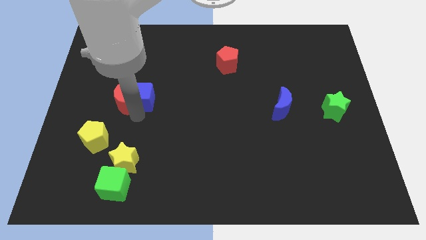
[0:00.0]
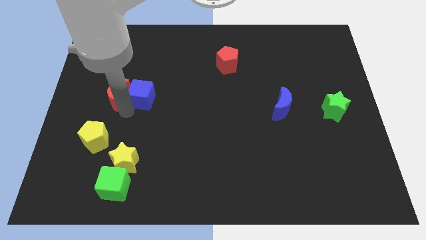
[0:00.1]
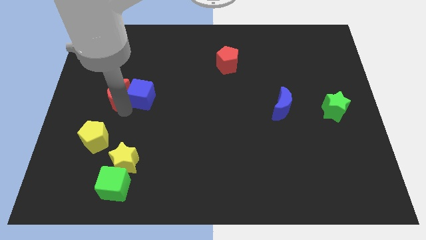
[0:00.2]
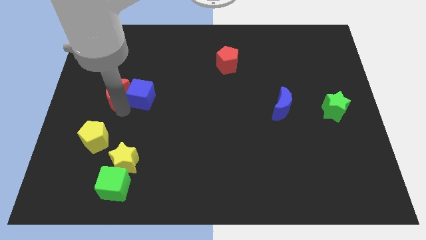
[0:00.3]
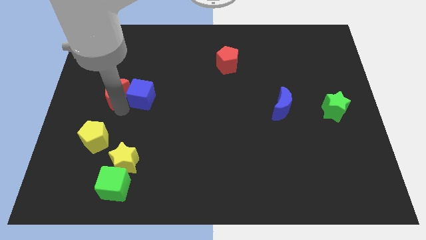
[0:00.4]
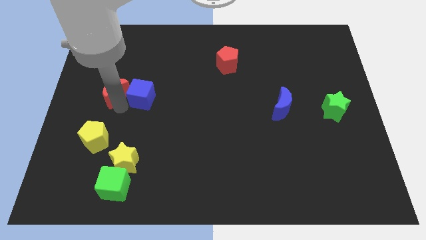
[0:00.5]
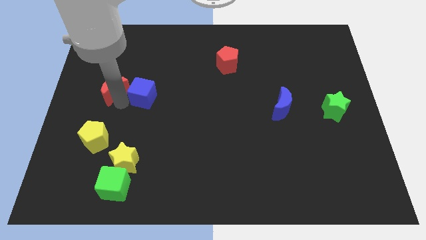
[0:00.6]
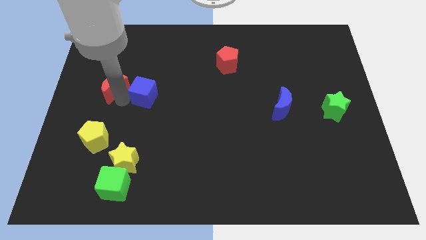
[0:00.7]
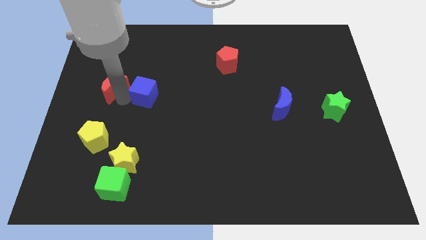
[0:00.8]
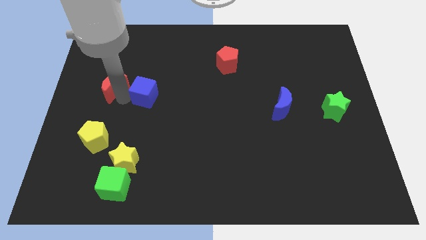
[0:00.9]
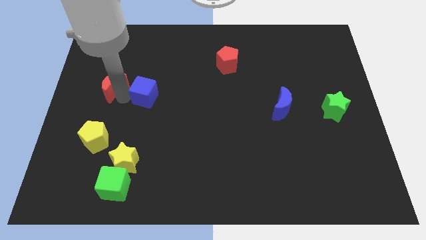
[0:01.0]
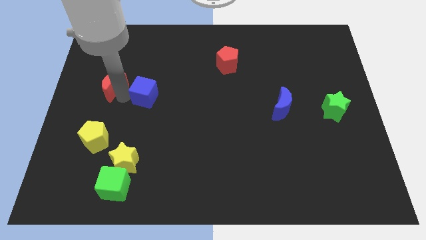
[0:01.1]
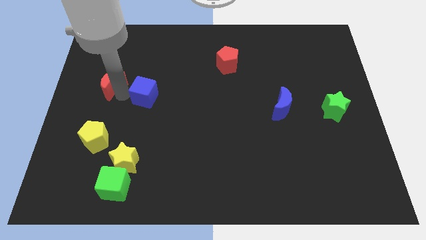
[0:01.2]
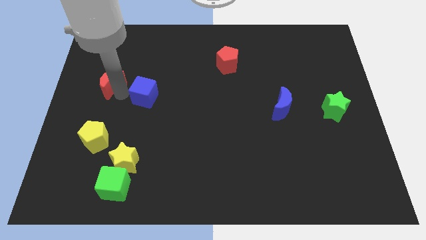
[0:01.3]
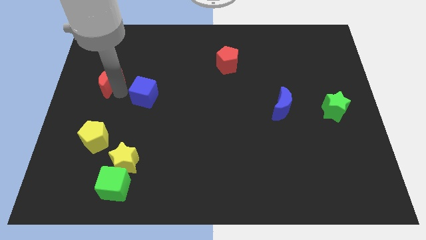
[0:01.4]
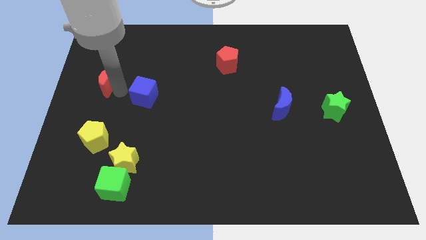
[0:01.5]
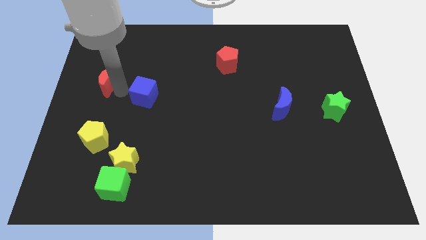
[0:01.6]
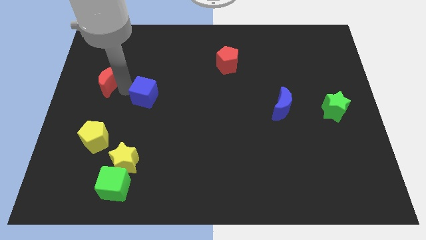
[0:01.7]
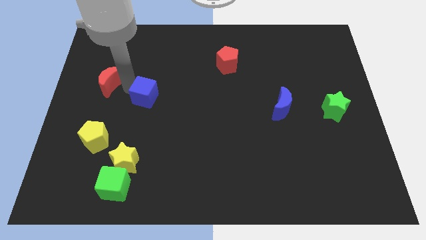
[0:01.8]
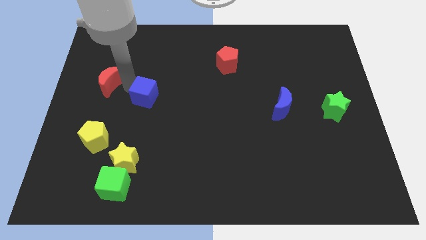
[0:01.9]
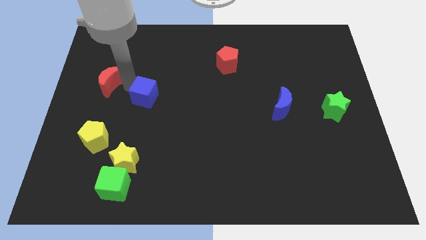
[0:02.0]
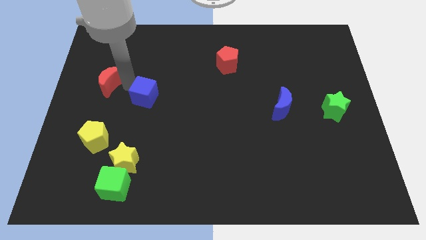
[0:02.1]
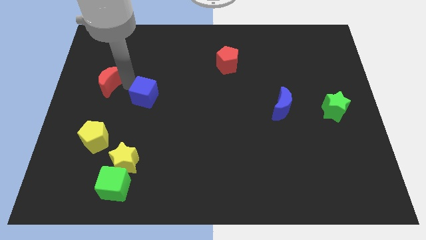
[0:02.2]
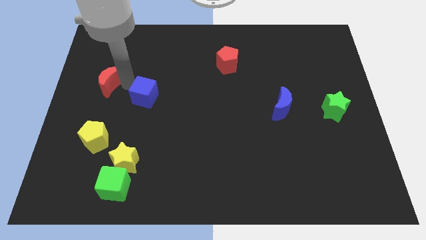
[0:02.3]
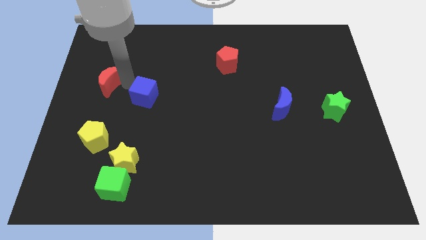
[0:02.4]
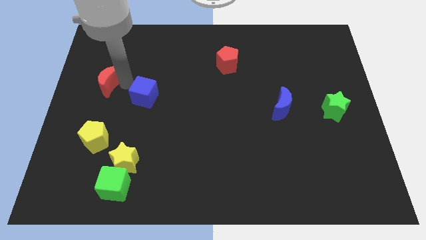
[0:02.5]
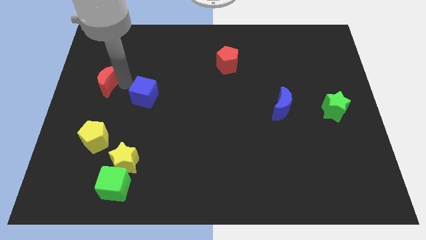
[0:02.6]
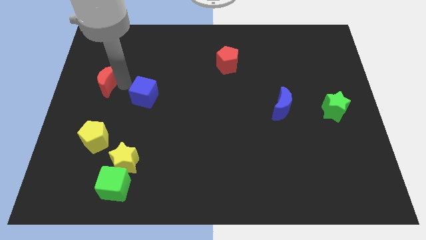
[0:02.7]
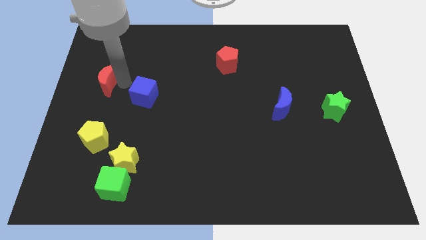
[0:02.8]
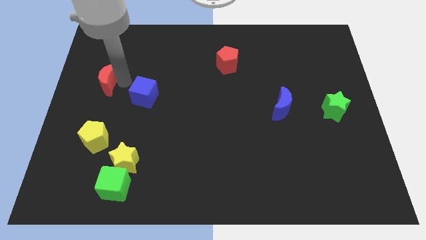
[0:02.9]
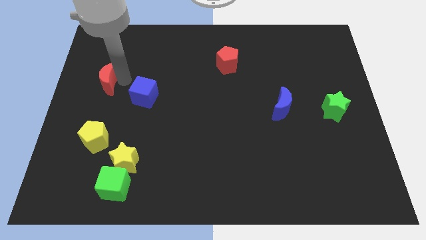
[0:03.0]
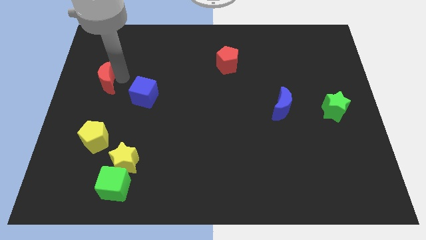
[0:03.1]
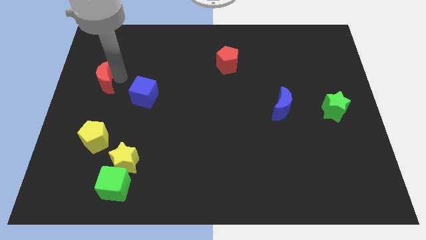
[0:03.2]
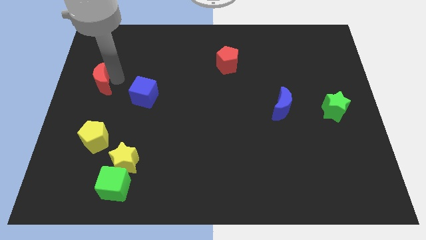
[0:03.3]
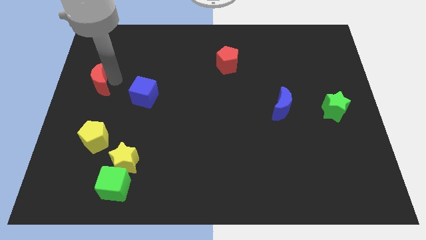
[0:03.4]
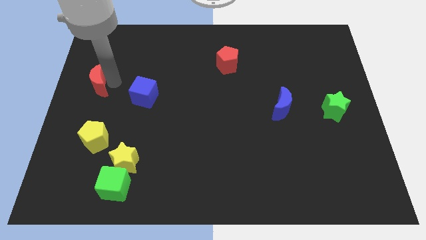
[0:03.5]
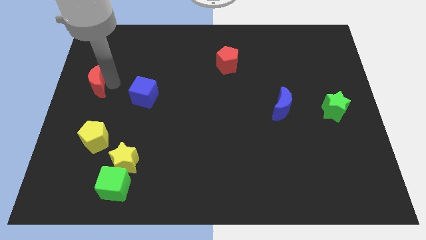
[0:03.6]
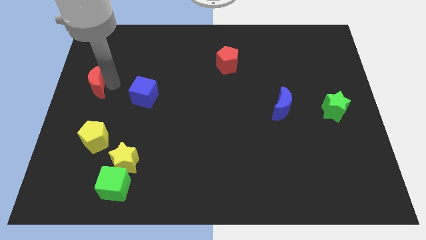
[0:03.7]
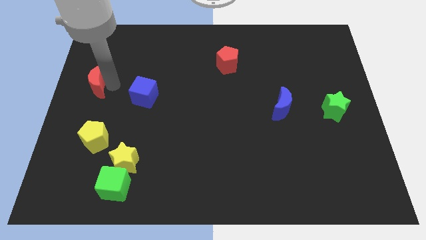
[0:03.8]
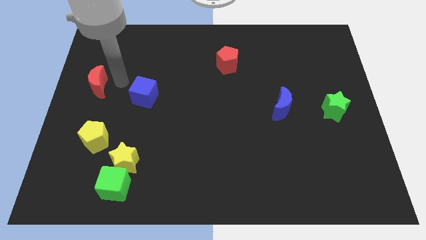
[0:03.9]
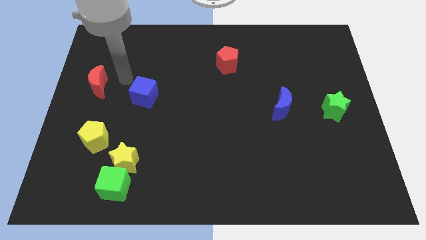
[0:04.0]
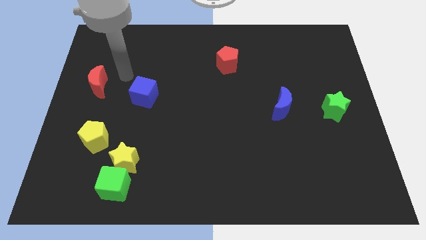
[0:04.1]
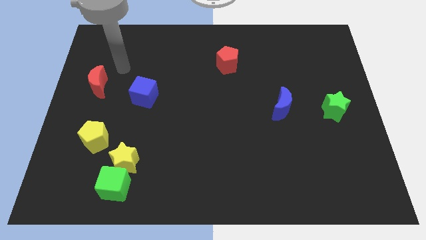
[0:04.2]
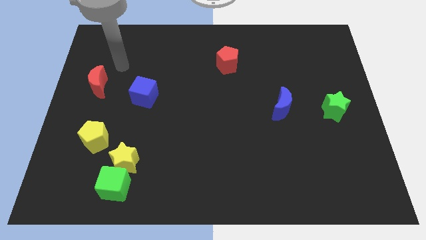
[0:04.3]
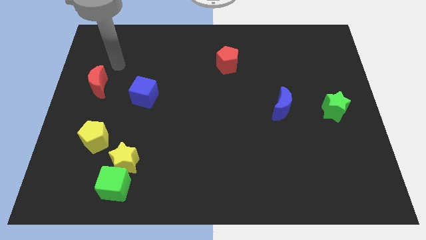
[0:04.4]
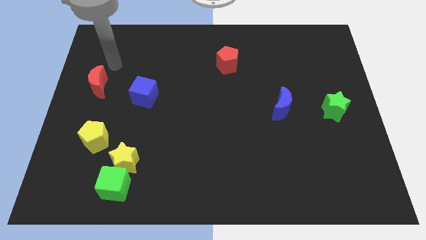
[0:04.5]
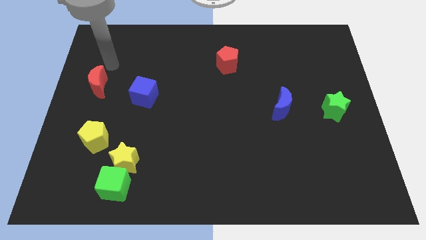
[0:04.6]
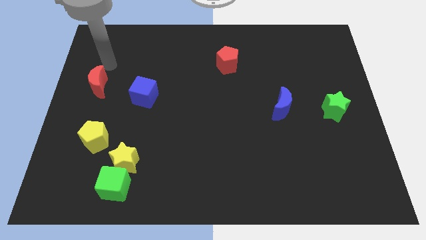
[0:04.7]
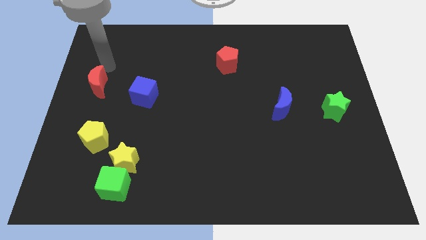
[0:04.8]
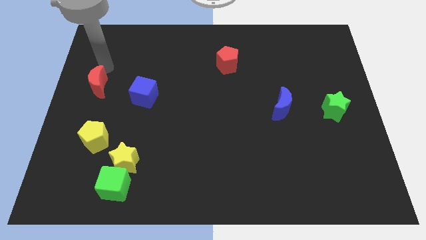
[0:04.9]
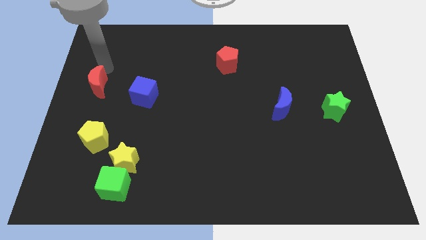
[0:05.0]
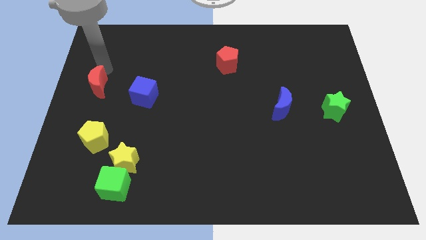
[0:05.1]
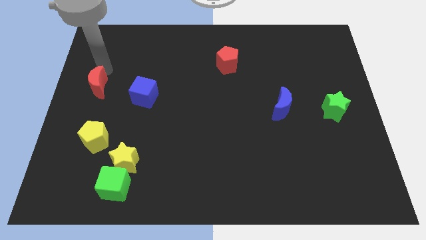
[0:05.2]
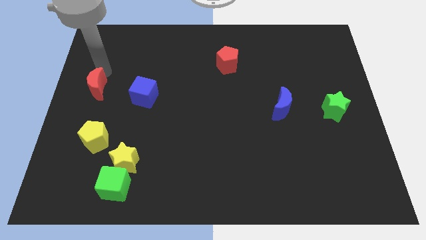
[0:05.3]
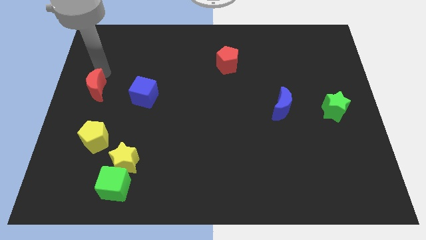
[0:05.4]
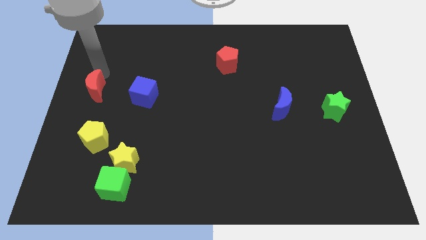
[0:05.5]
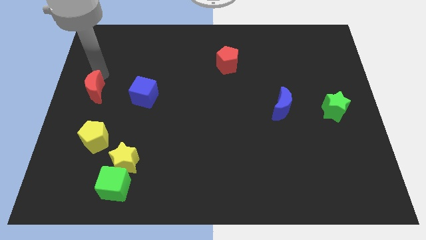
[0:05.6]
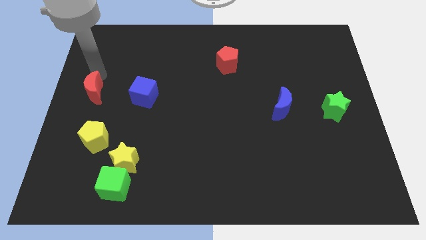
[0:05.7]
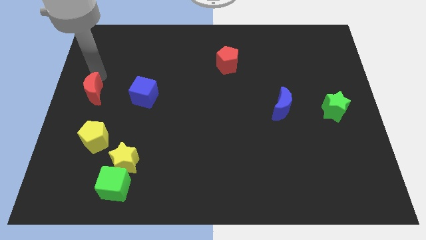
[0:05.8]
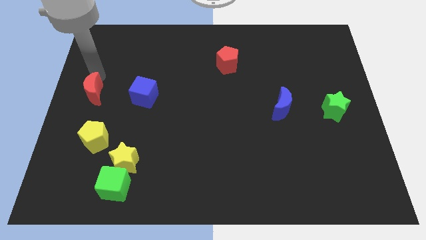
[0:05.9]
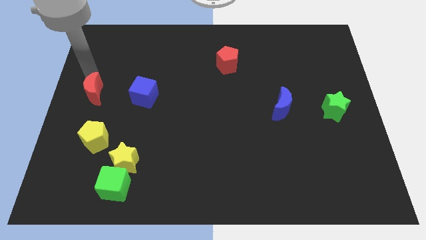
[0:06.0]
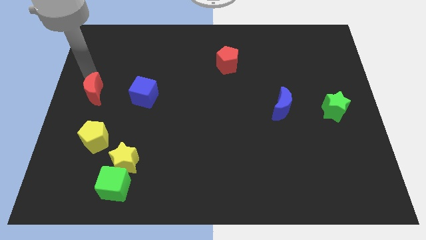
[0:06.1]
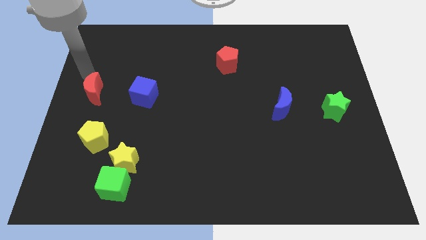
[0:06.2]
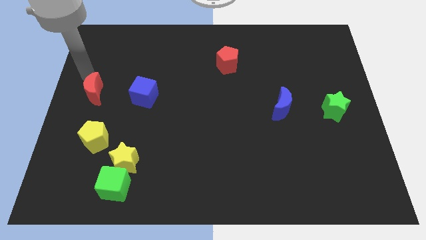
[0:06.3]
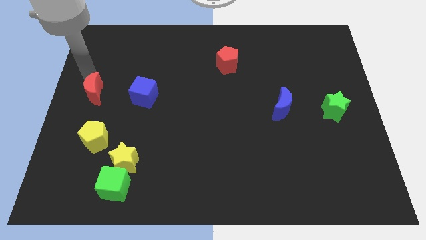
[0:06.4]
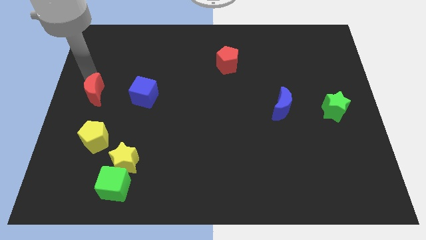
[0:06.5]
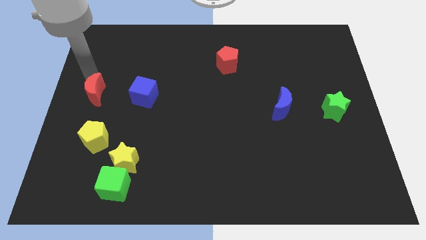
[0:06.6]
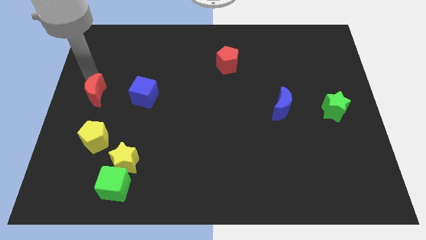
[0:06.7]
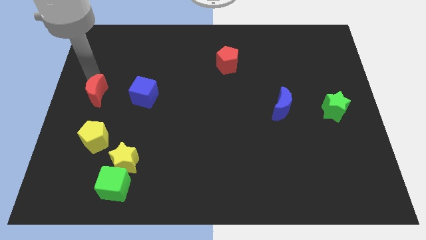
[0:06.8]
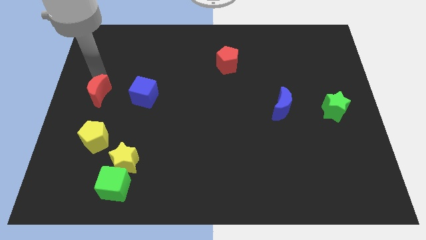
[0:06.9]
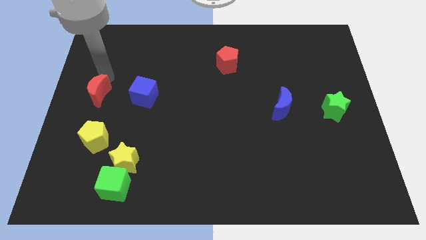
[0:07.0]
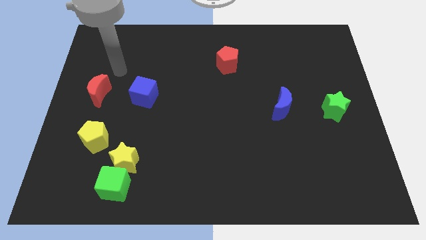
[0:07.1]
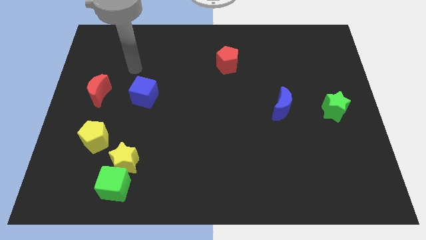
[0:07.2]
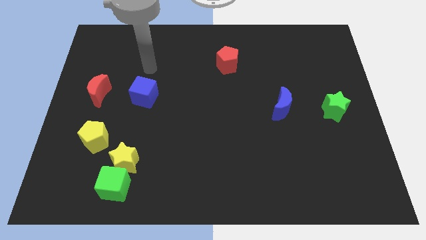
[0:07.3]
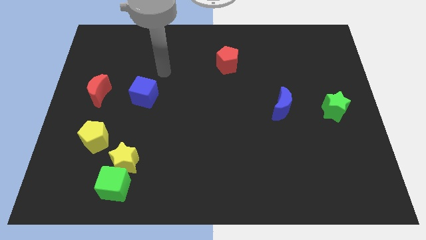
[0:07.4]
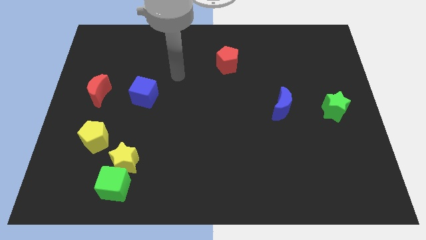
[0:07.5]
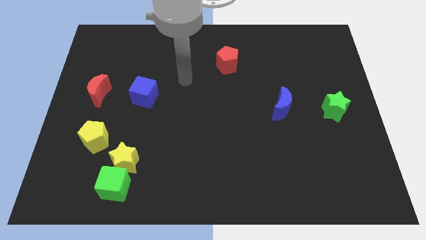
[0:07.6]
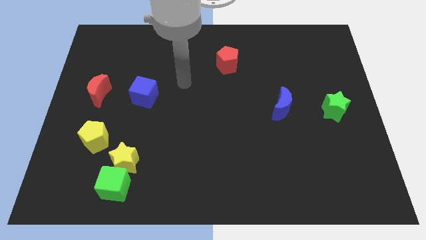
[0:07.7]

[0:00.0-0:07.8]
put the red crescent above the yellow pentagon

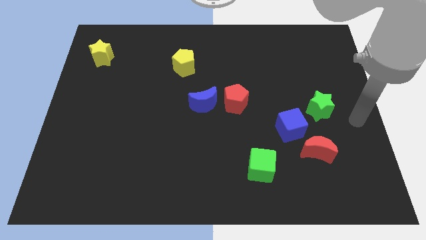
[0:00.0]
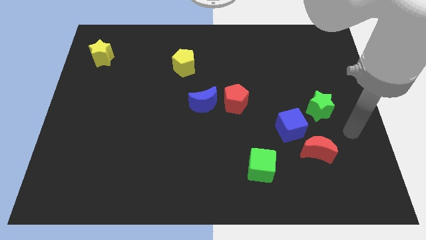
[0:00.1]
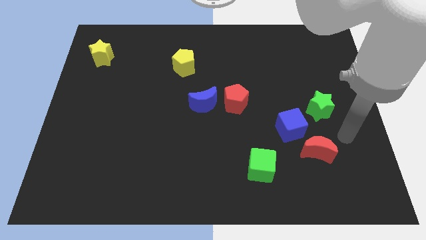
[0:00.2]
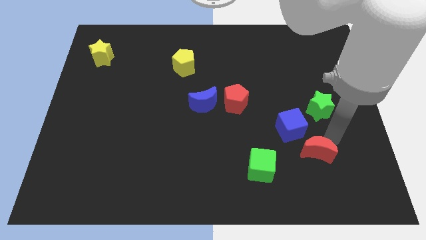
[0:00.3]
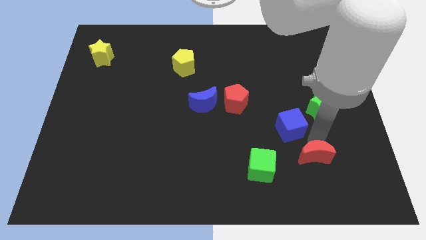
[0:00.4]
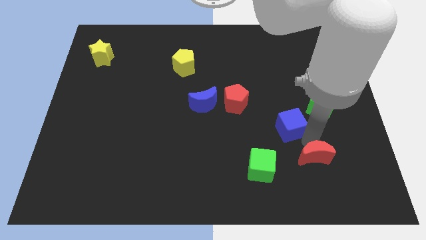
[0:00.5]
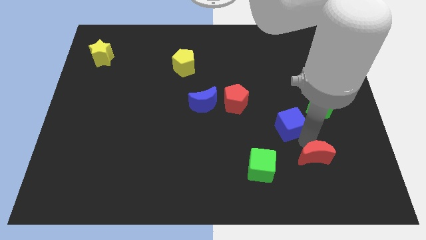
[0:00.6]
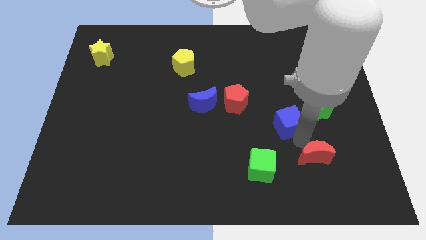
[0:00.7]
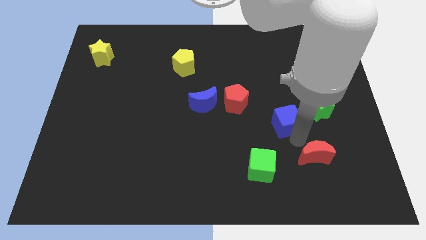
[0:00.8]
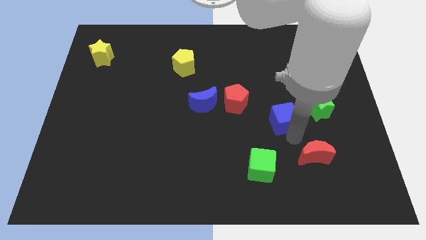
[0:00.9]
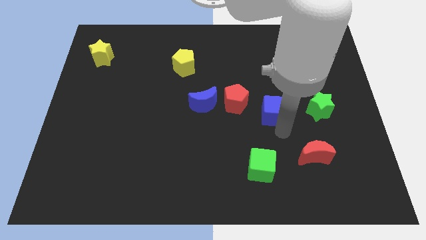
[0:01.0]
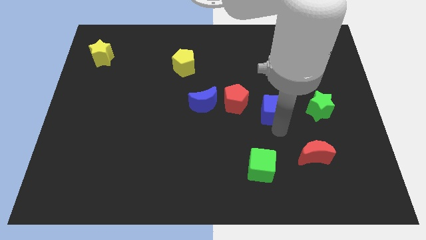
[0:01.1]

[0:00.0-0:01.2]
drag the blue cube close to the red pentagon
